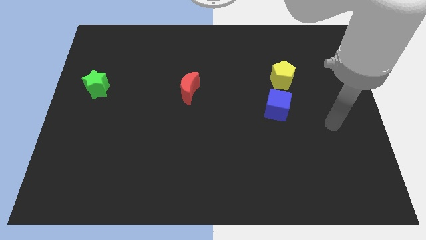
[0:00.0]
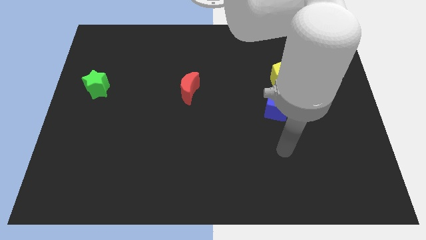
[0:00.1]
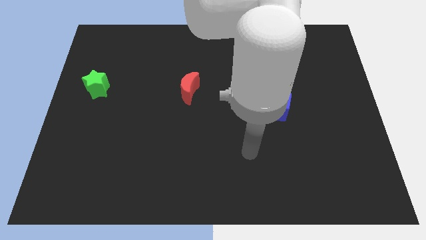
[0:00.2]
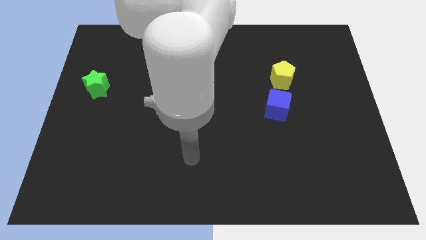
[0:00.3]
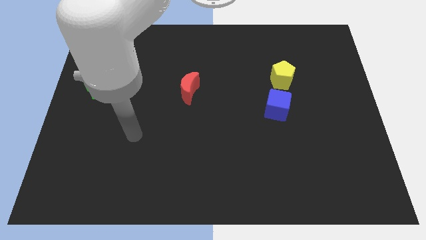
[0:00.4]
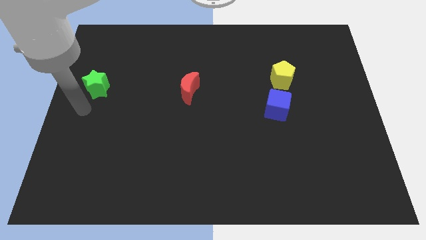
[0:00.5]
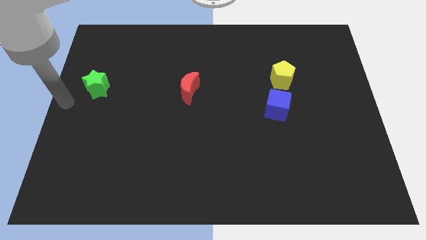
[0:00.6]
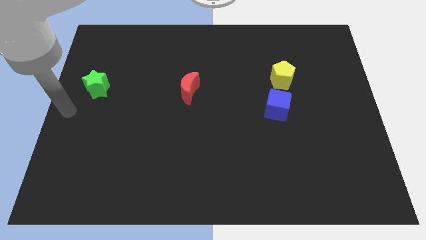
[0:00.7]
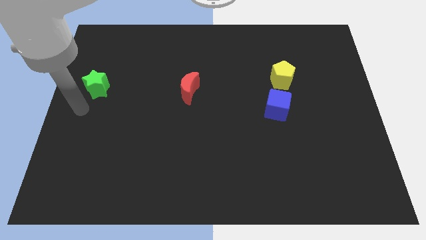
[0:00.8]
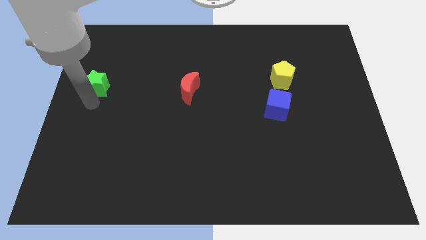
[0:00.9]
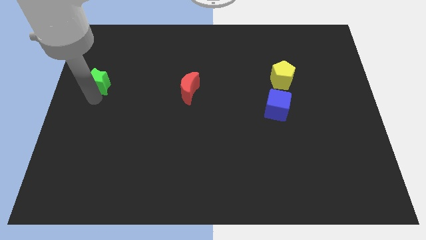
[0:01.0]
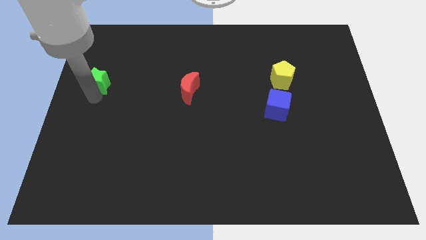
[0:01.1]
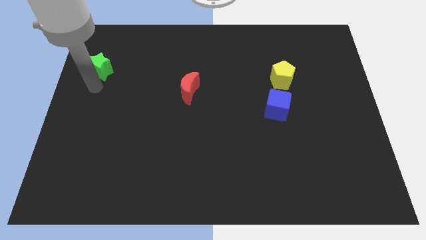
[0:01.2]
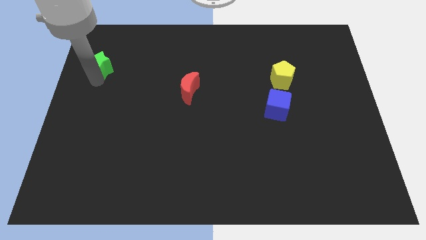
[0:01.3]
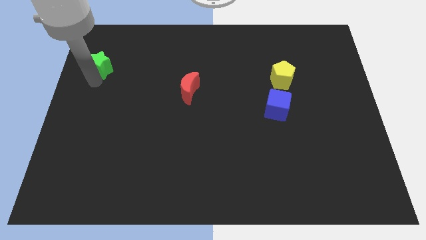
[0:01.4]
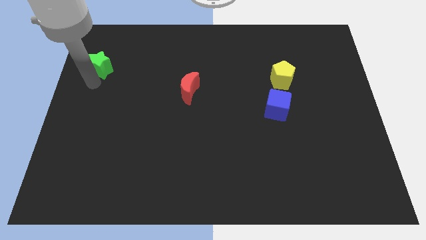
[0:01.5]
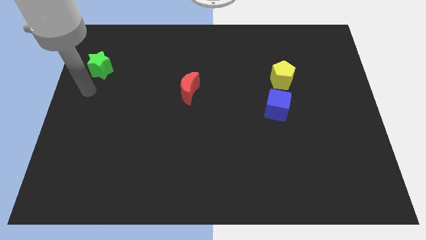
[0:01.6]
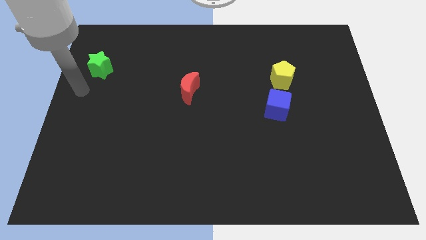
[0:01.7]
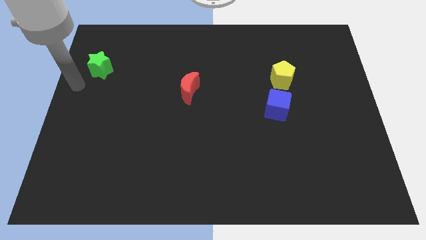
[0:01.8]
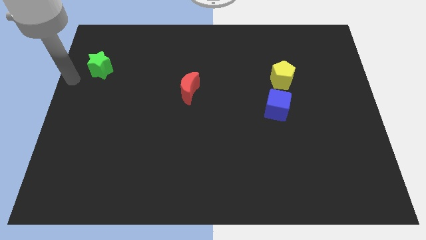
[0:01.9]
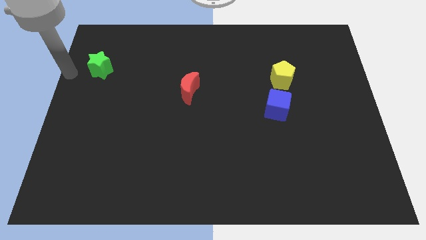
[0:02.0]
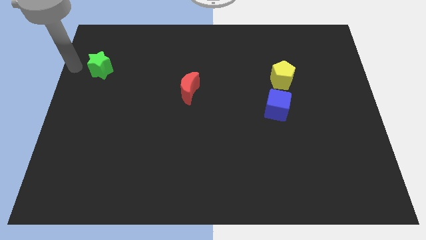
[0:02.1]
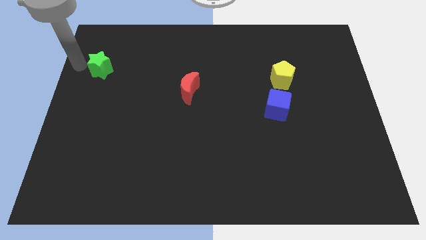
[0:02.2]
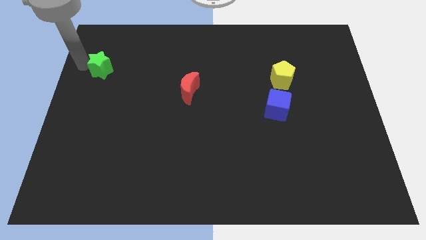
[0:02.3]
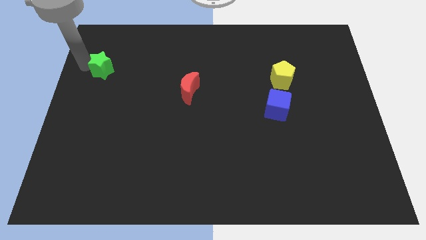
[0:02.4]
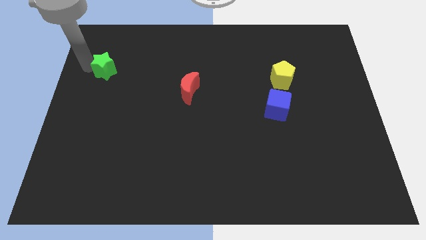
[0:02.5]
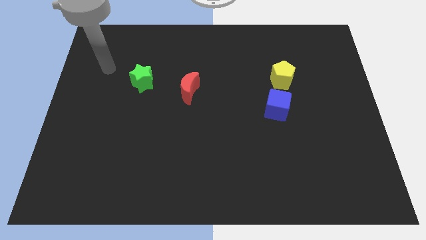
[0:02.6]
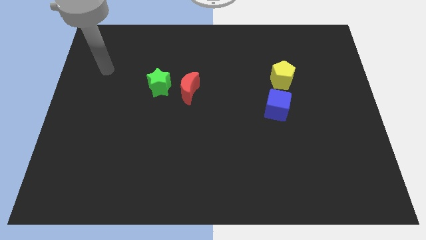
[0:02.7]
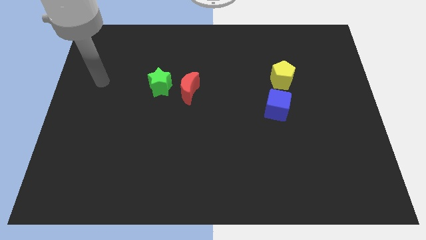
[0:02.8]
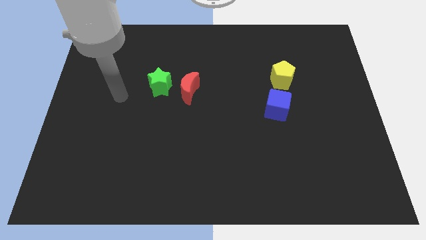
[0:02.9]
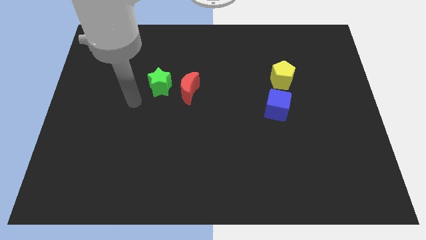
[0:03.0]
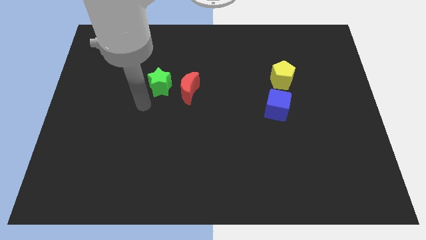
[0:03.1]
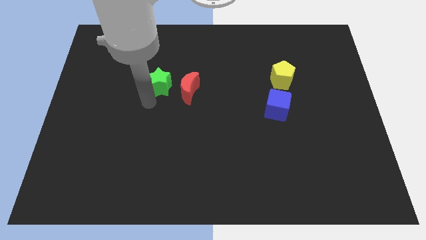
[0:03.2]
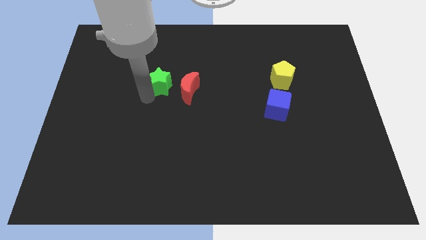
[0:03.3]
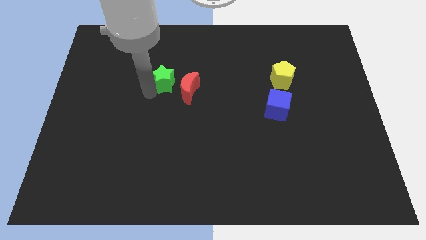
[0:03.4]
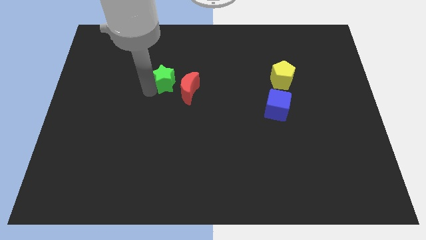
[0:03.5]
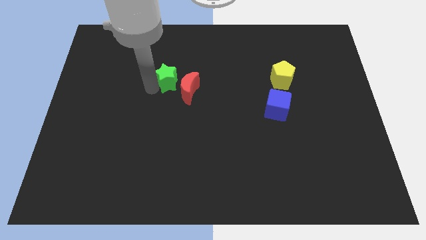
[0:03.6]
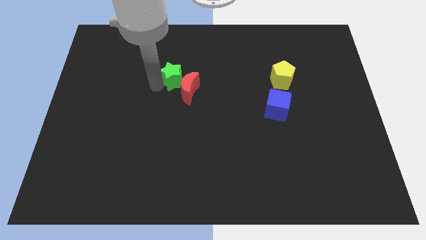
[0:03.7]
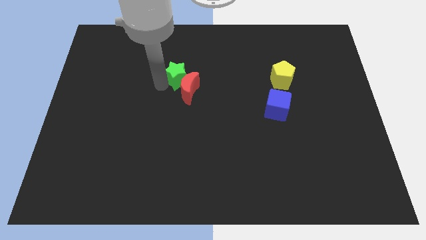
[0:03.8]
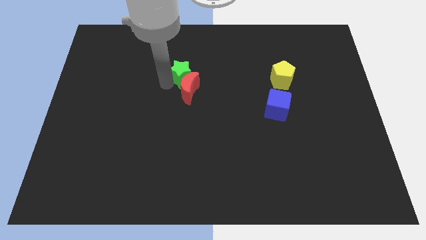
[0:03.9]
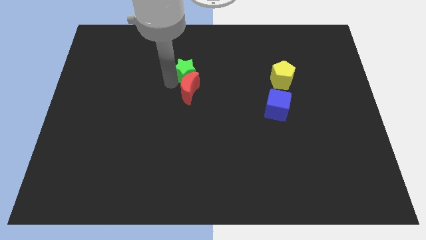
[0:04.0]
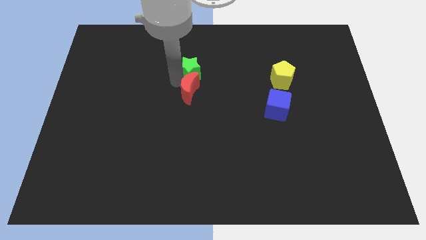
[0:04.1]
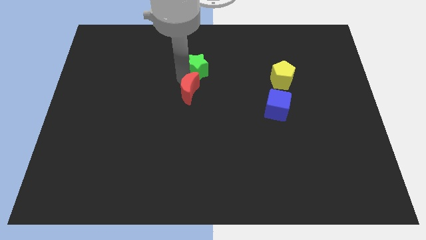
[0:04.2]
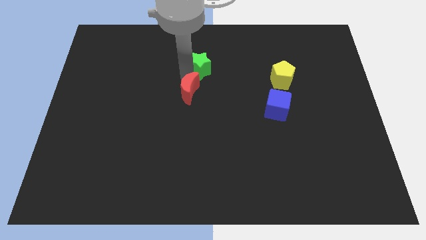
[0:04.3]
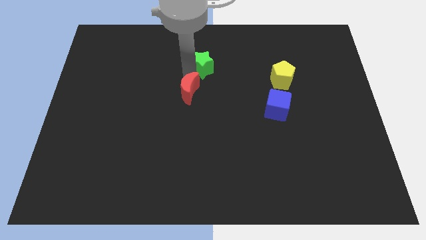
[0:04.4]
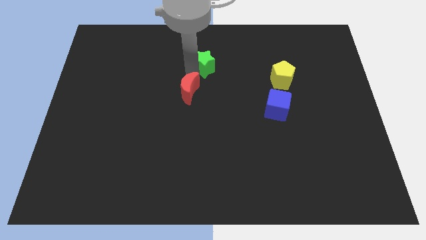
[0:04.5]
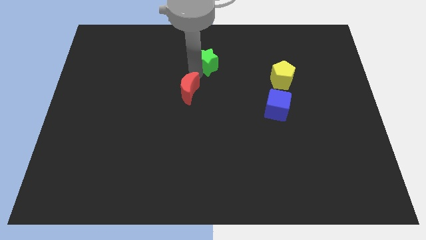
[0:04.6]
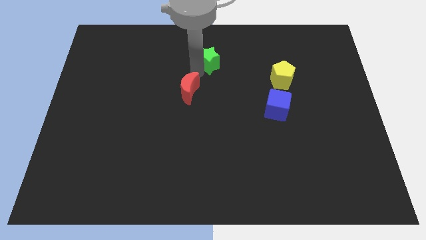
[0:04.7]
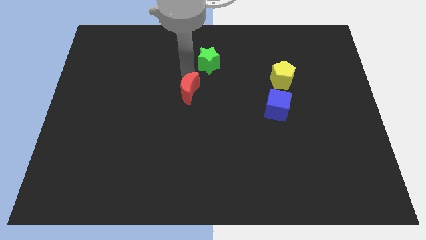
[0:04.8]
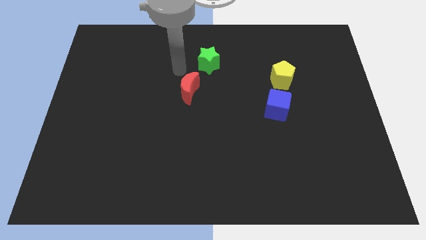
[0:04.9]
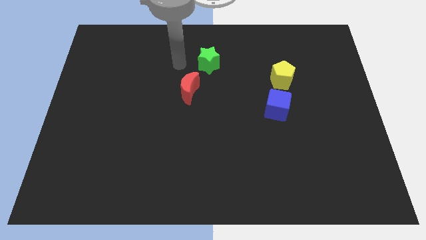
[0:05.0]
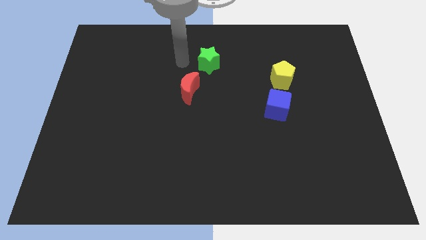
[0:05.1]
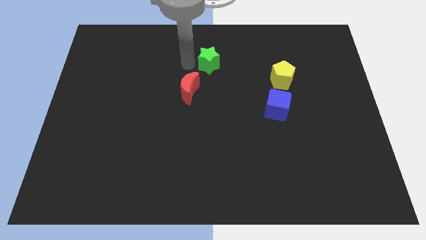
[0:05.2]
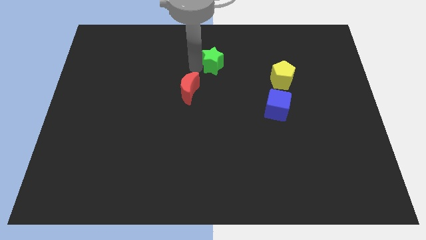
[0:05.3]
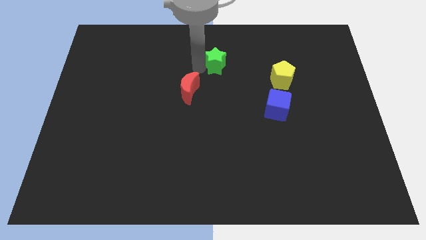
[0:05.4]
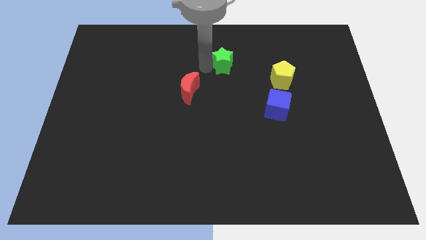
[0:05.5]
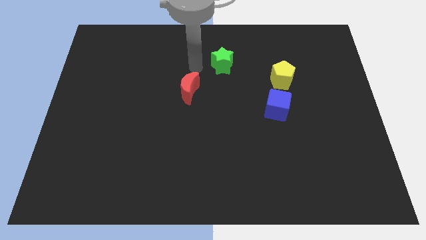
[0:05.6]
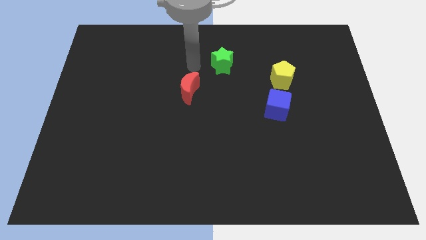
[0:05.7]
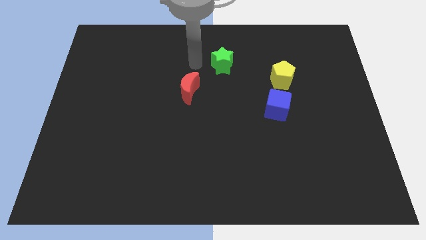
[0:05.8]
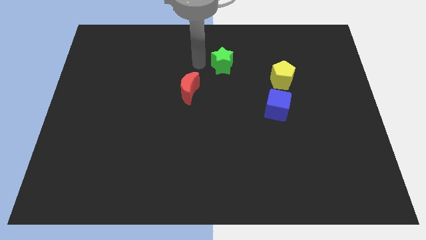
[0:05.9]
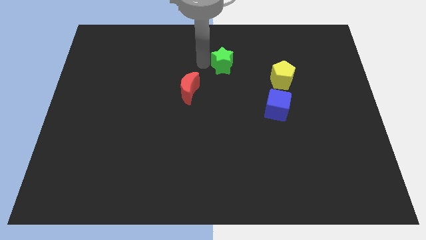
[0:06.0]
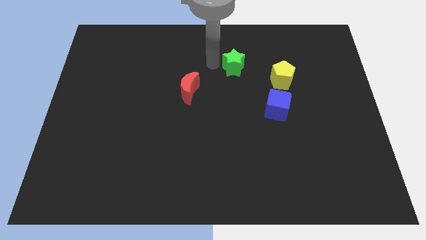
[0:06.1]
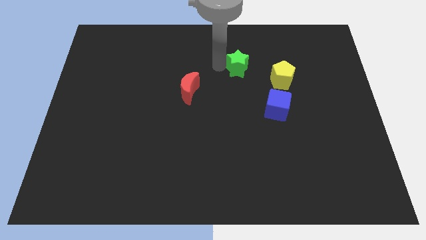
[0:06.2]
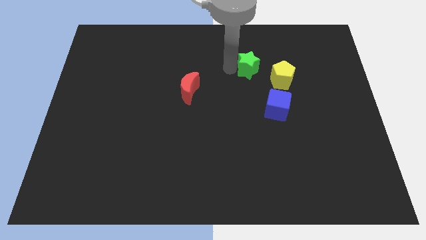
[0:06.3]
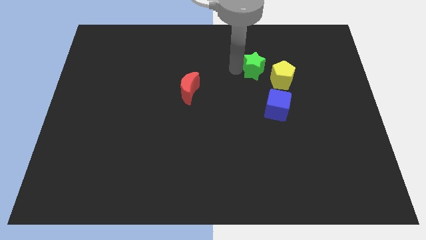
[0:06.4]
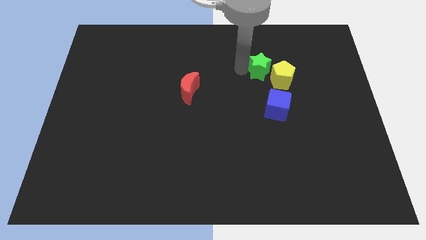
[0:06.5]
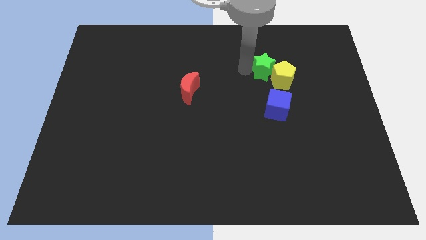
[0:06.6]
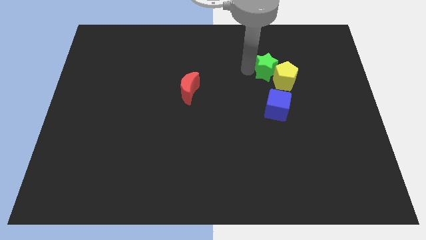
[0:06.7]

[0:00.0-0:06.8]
put the green block to the pentagon

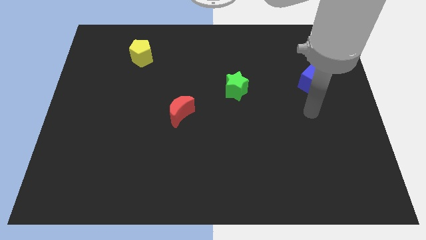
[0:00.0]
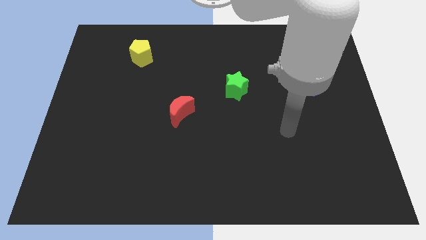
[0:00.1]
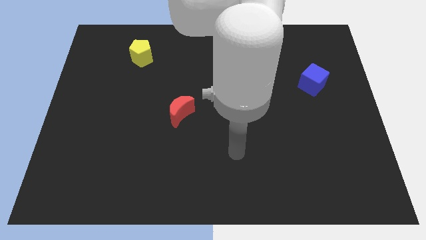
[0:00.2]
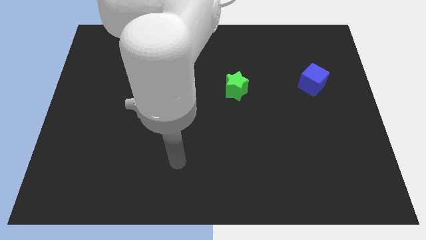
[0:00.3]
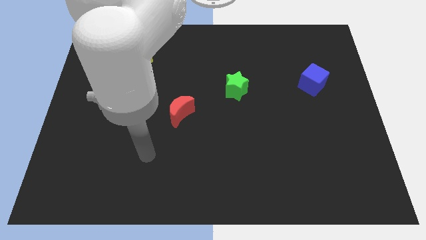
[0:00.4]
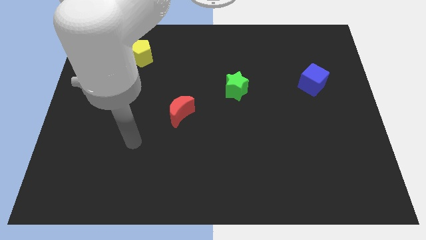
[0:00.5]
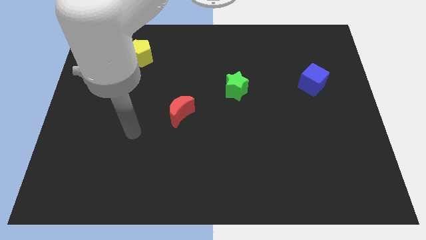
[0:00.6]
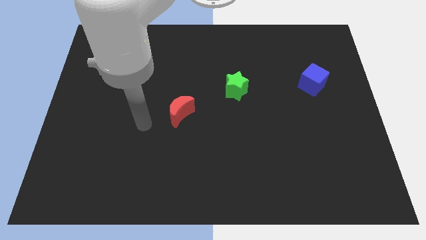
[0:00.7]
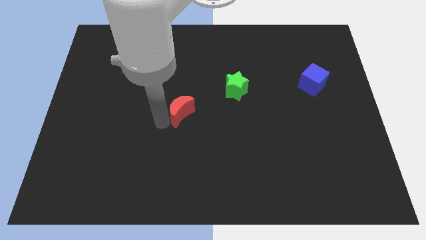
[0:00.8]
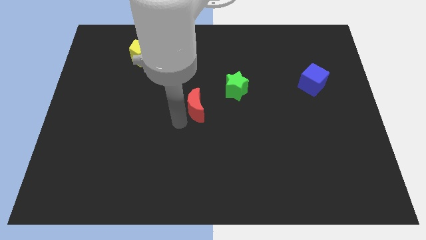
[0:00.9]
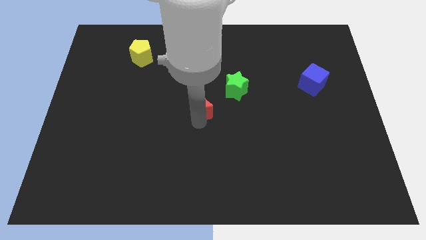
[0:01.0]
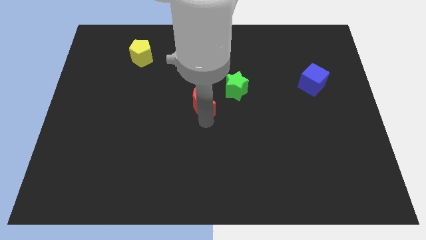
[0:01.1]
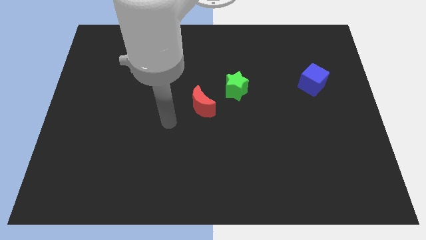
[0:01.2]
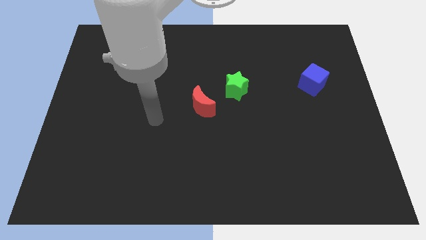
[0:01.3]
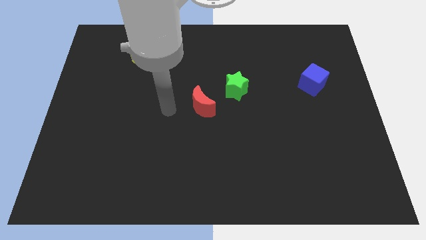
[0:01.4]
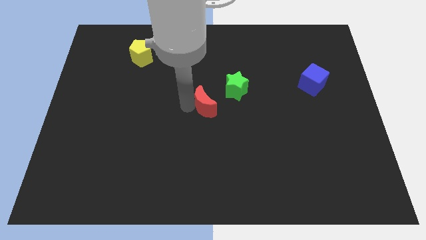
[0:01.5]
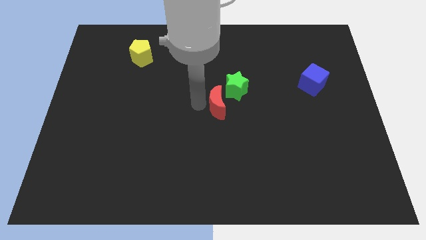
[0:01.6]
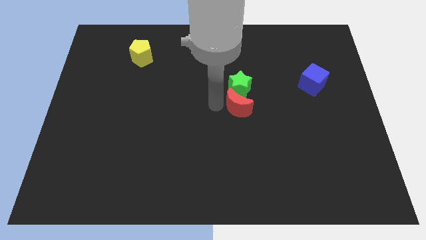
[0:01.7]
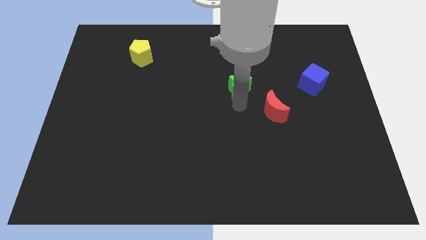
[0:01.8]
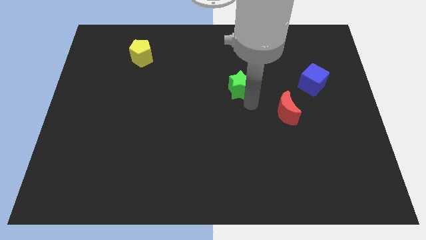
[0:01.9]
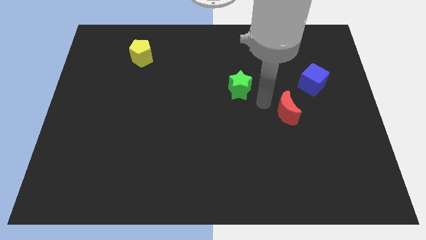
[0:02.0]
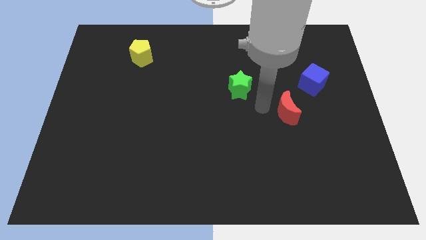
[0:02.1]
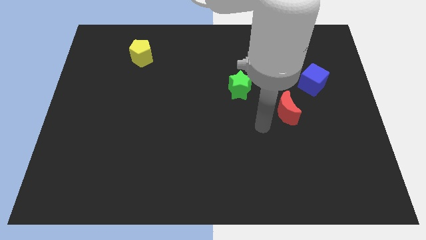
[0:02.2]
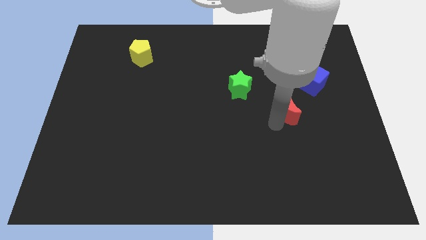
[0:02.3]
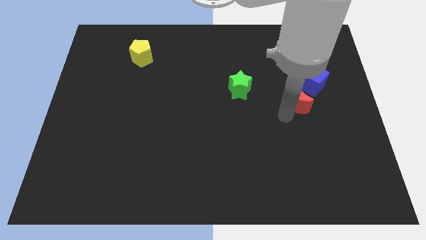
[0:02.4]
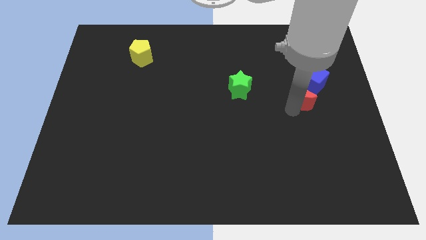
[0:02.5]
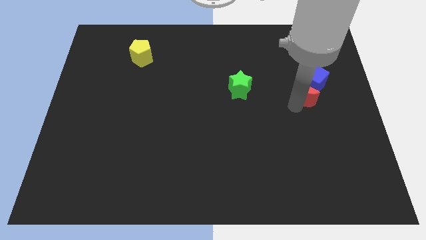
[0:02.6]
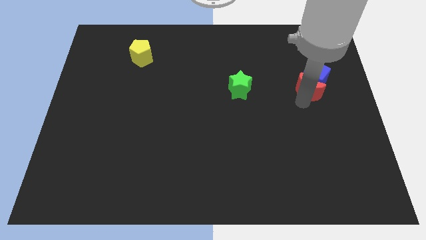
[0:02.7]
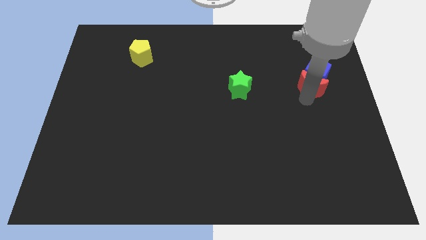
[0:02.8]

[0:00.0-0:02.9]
put the moon towards the cube
